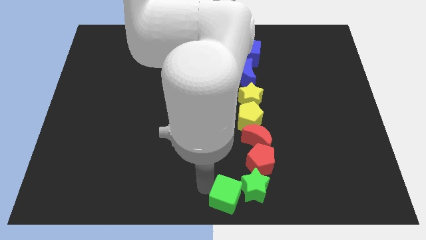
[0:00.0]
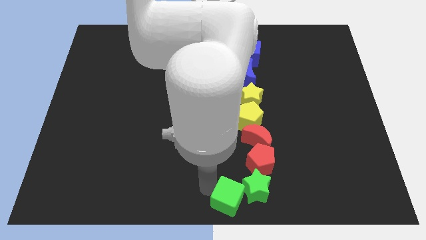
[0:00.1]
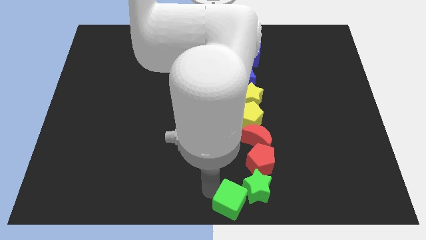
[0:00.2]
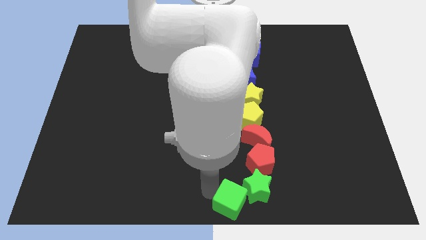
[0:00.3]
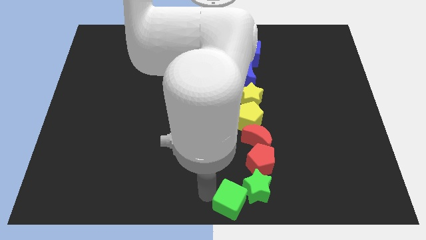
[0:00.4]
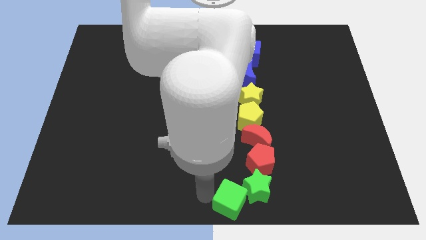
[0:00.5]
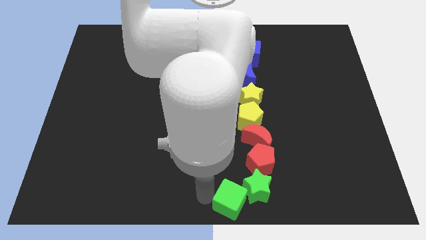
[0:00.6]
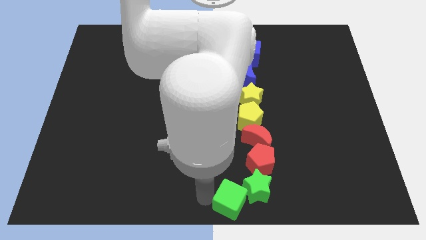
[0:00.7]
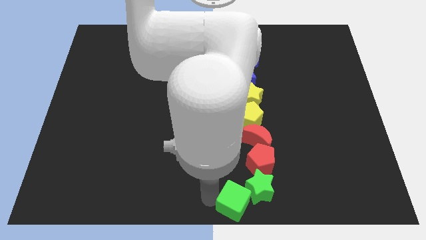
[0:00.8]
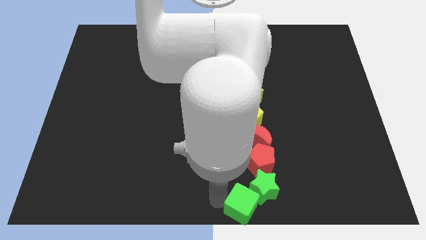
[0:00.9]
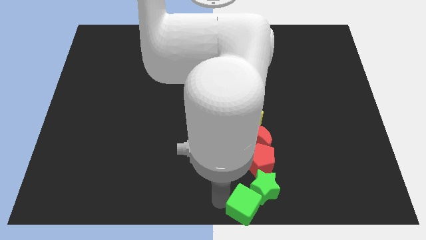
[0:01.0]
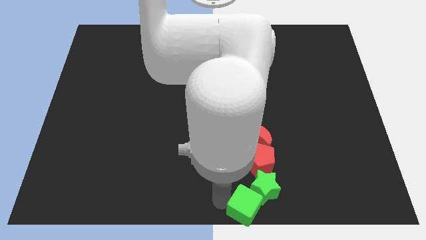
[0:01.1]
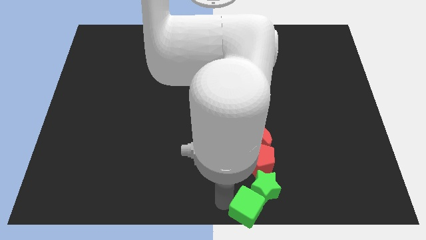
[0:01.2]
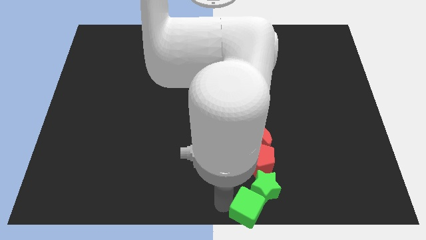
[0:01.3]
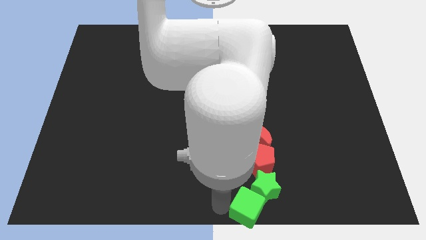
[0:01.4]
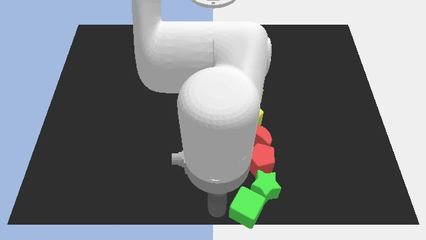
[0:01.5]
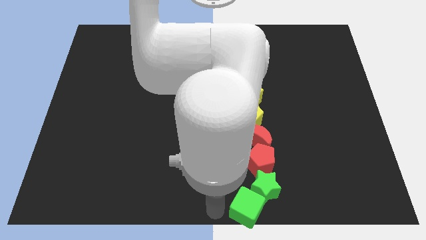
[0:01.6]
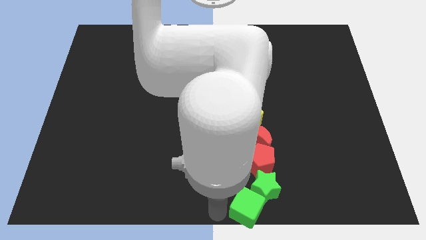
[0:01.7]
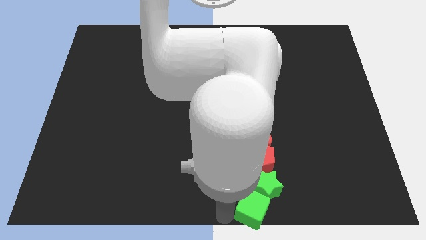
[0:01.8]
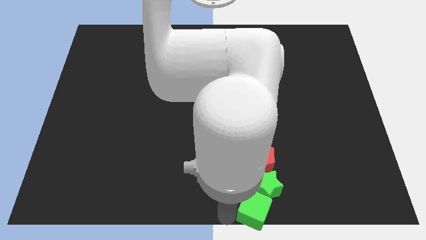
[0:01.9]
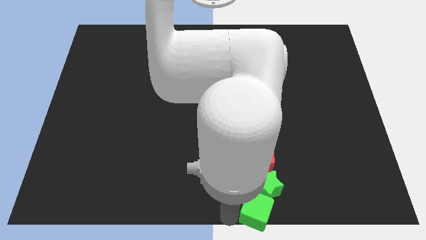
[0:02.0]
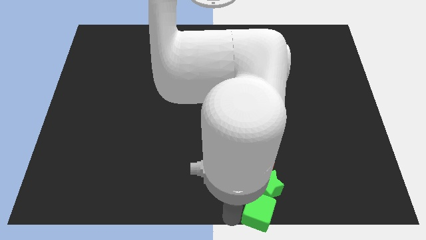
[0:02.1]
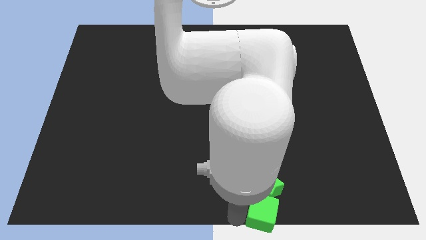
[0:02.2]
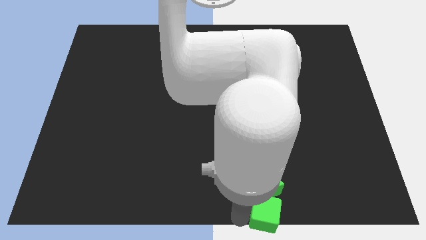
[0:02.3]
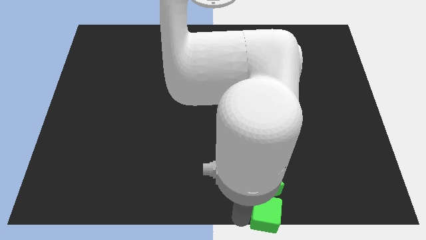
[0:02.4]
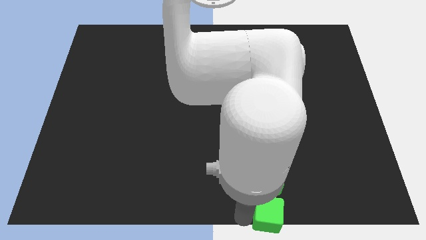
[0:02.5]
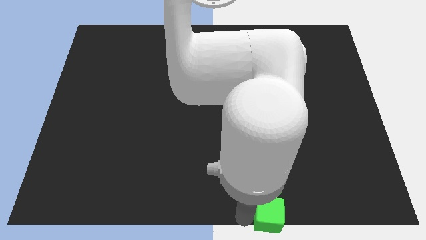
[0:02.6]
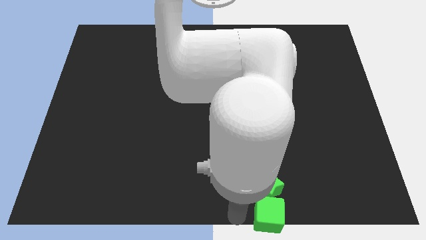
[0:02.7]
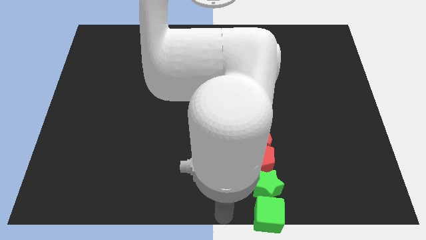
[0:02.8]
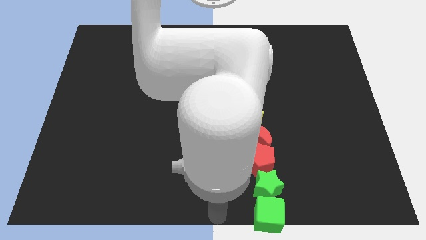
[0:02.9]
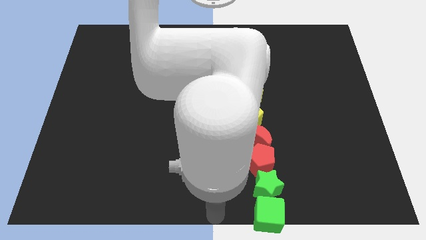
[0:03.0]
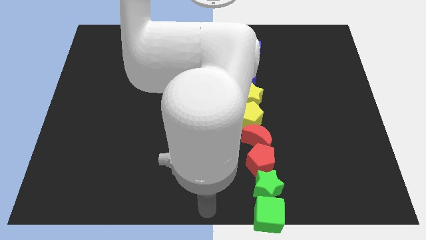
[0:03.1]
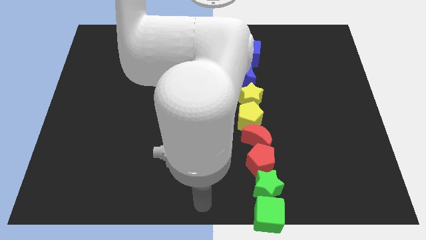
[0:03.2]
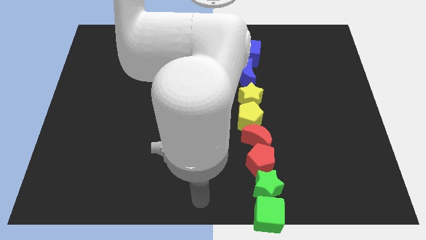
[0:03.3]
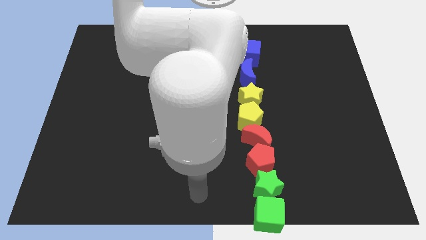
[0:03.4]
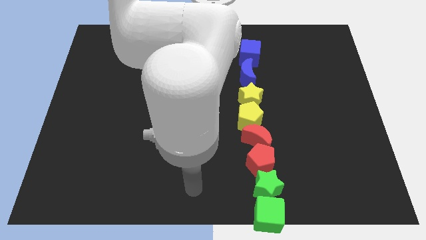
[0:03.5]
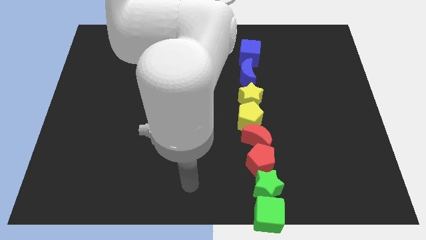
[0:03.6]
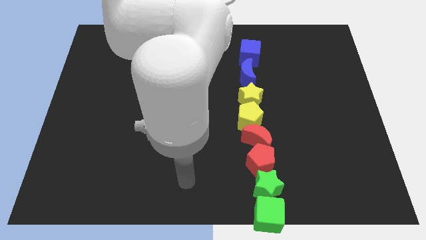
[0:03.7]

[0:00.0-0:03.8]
place the green cube at the bottom side of the green star

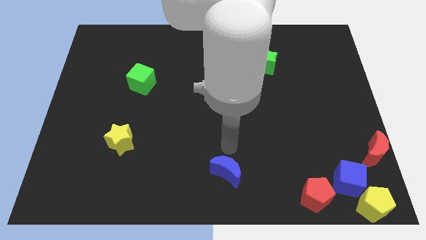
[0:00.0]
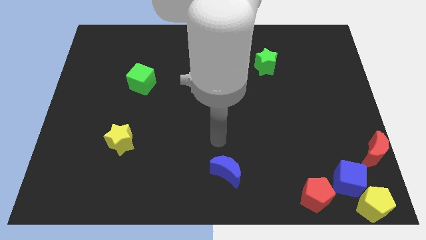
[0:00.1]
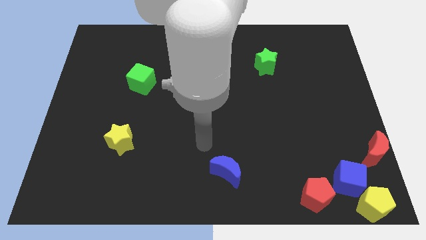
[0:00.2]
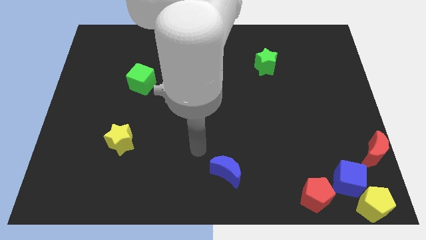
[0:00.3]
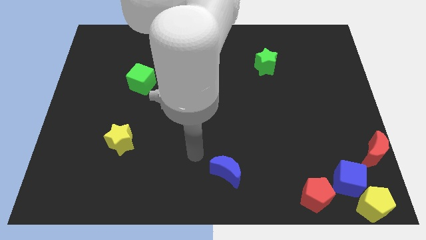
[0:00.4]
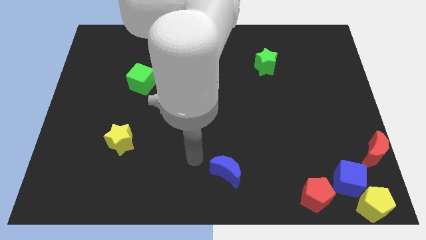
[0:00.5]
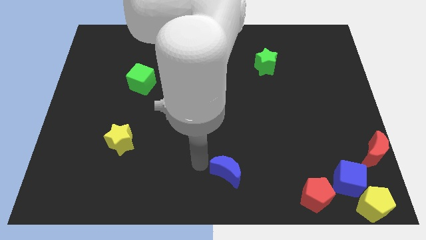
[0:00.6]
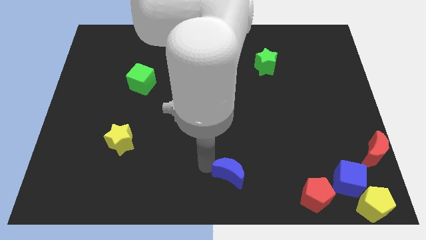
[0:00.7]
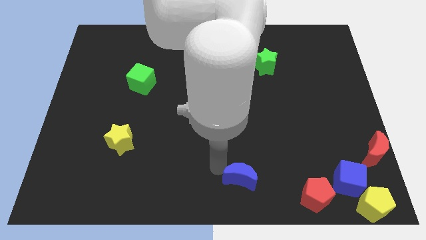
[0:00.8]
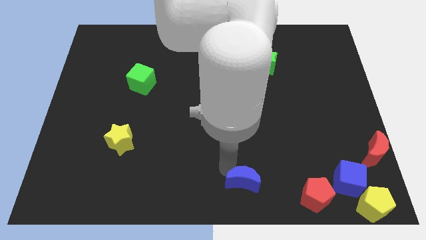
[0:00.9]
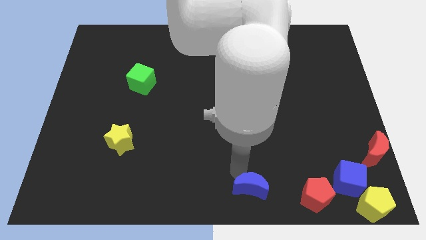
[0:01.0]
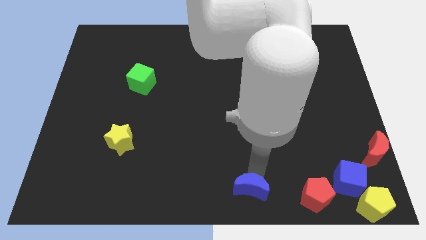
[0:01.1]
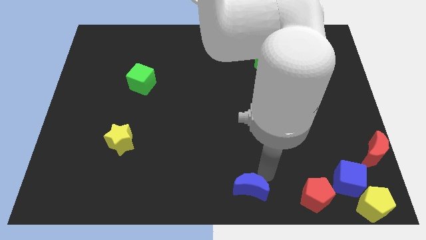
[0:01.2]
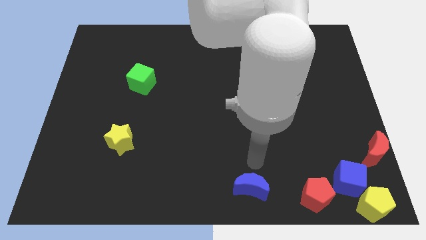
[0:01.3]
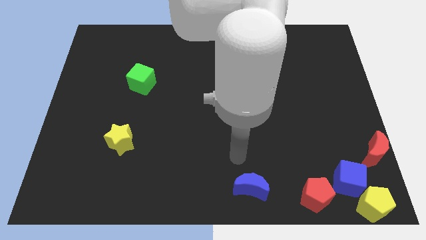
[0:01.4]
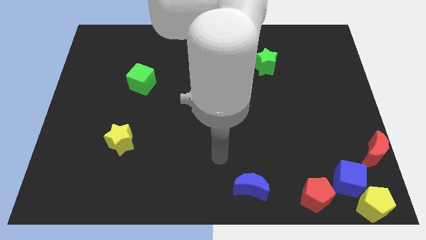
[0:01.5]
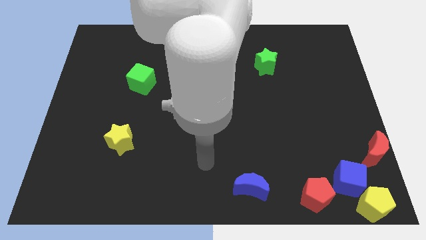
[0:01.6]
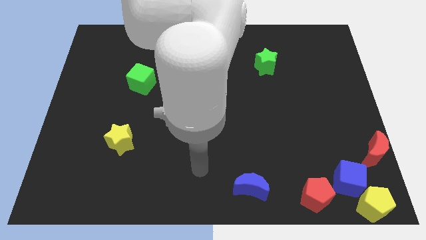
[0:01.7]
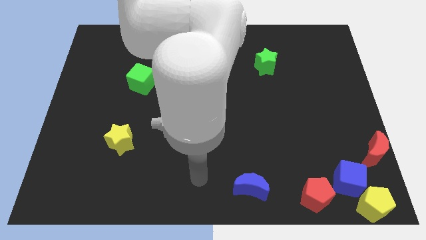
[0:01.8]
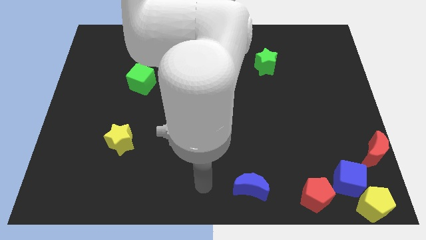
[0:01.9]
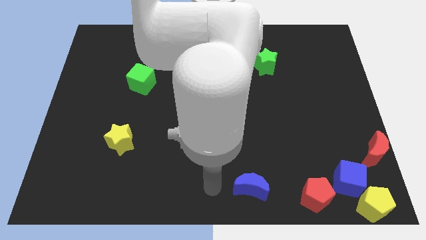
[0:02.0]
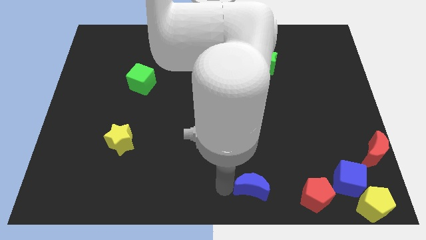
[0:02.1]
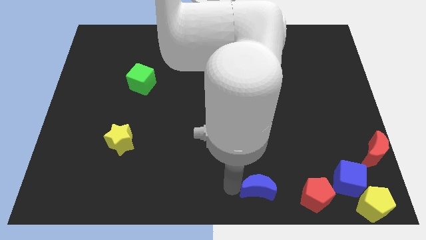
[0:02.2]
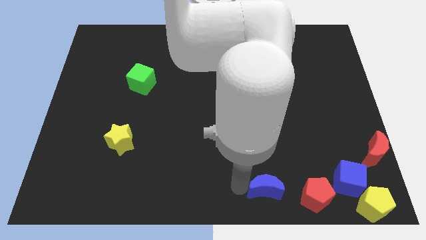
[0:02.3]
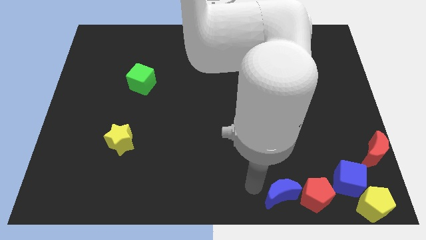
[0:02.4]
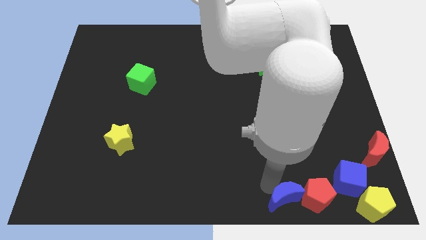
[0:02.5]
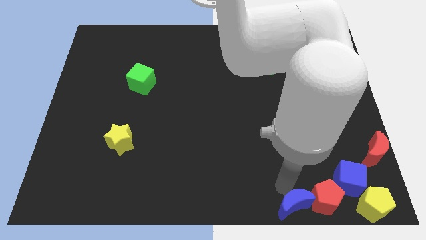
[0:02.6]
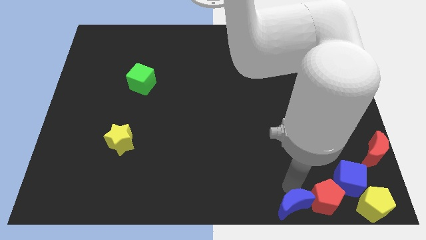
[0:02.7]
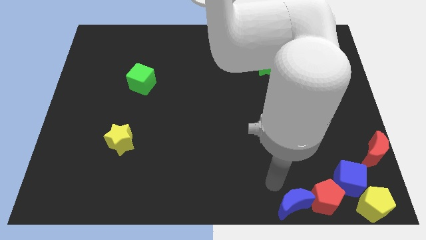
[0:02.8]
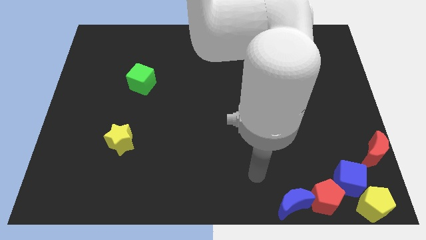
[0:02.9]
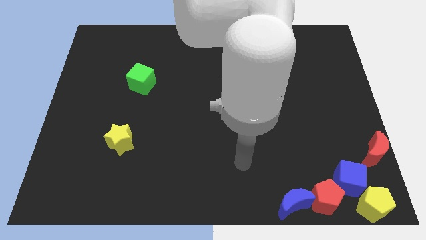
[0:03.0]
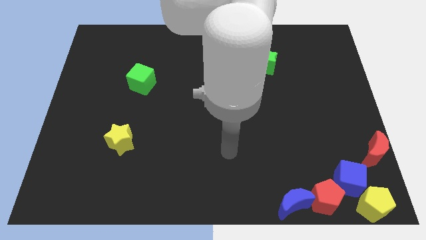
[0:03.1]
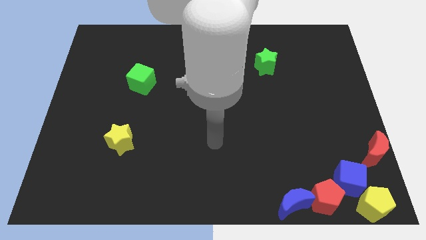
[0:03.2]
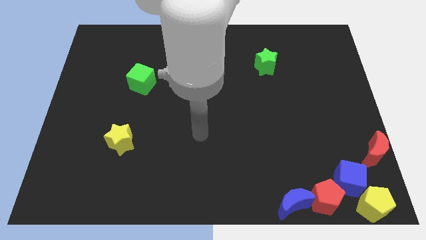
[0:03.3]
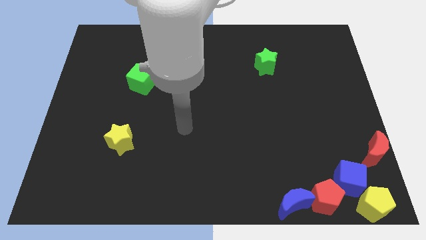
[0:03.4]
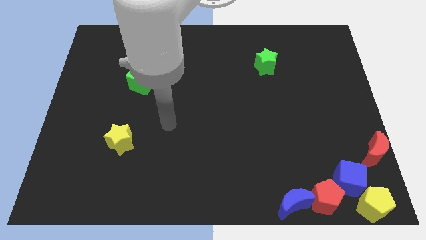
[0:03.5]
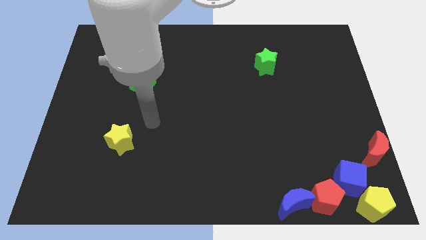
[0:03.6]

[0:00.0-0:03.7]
move the blue crescent into the left side of the red pentagon

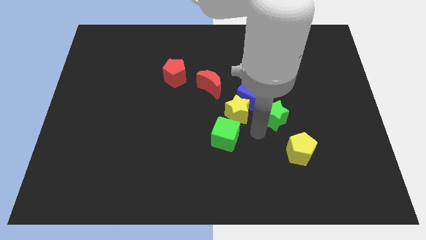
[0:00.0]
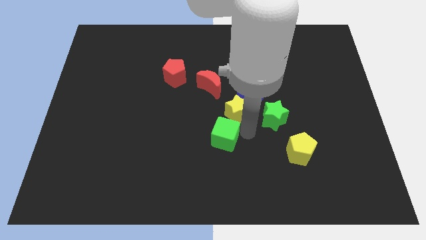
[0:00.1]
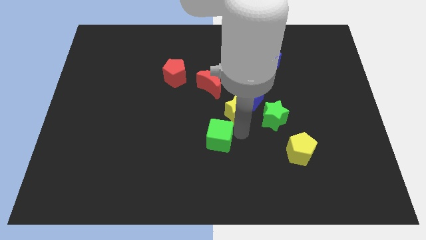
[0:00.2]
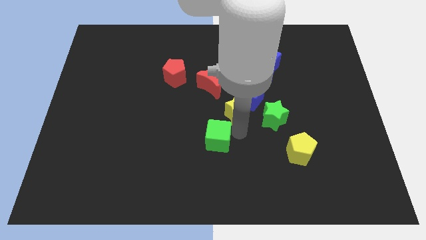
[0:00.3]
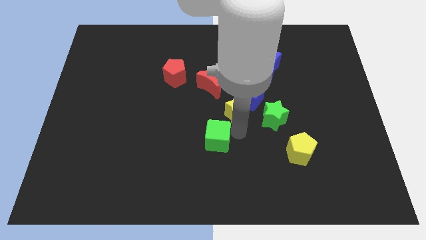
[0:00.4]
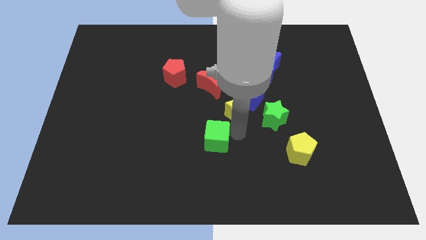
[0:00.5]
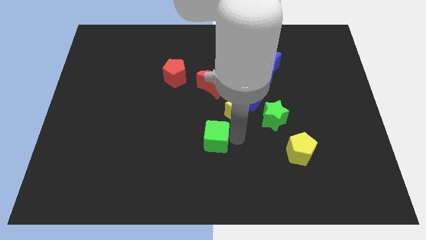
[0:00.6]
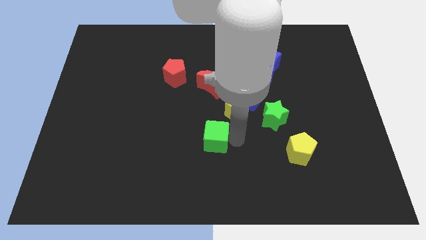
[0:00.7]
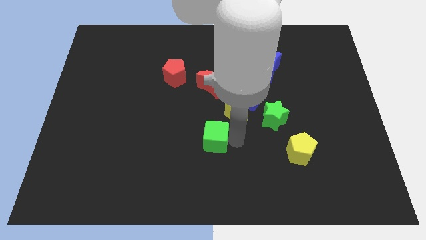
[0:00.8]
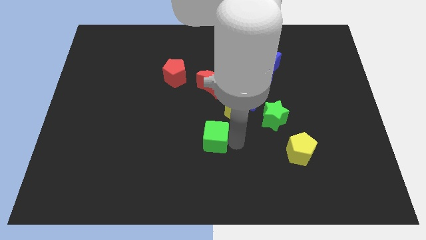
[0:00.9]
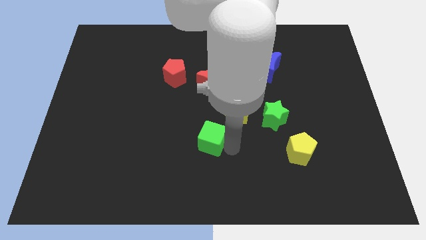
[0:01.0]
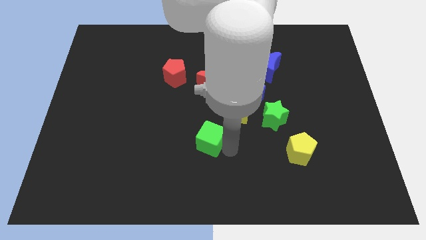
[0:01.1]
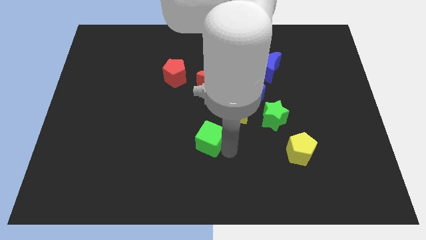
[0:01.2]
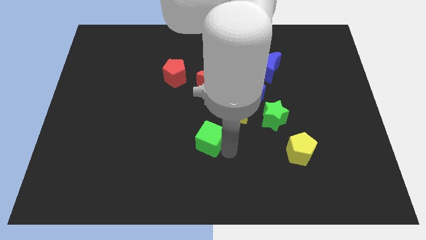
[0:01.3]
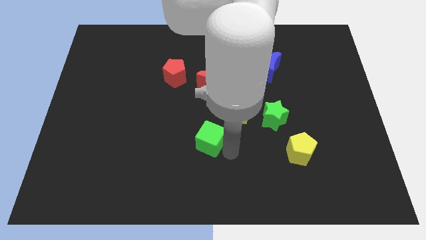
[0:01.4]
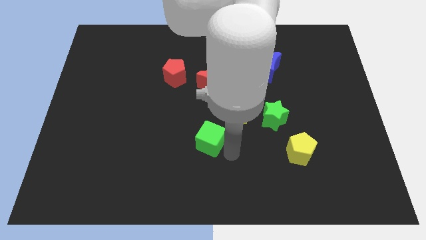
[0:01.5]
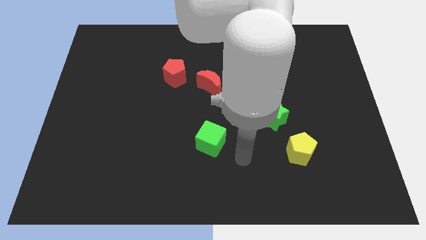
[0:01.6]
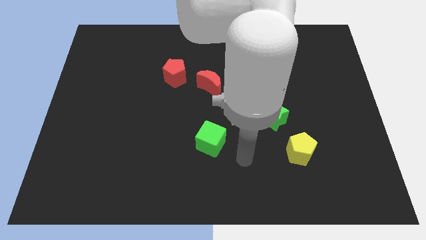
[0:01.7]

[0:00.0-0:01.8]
push the green cube vertically at the bottom of the red moon
